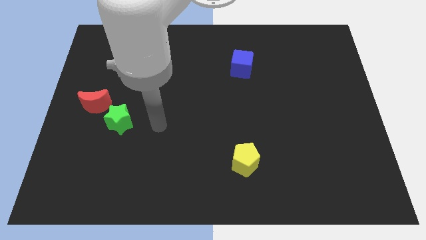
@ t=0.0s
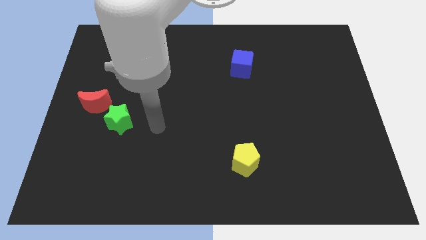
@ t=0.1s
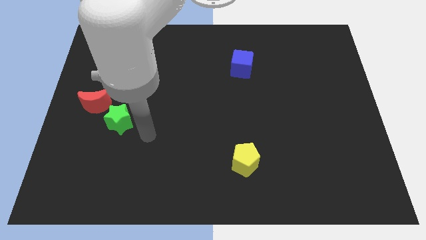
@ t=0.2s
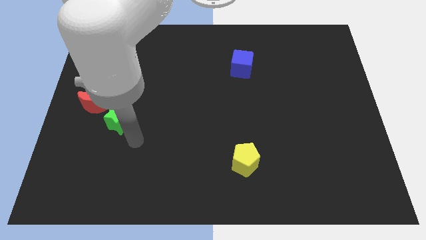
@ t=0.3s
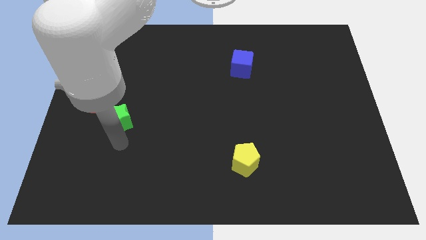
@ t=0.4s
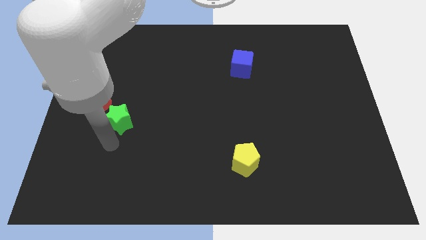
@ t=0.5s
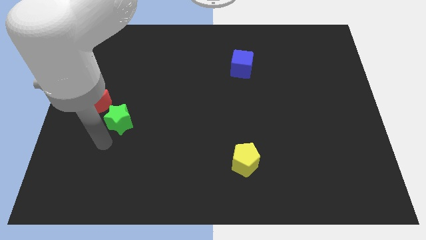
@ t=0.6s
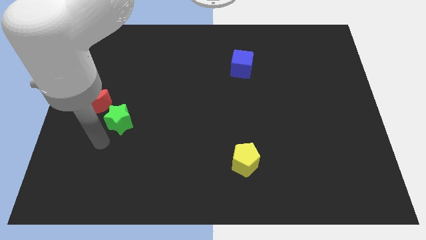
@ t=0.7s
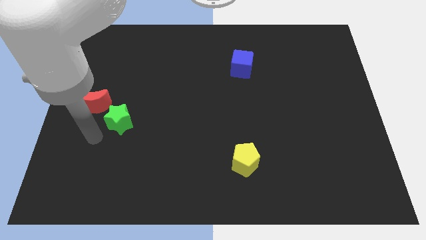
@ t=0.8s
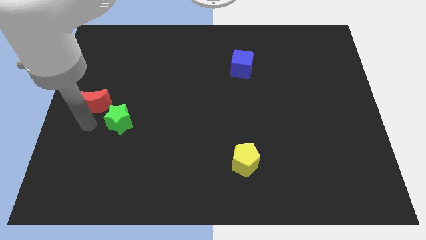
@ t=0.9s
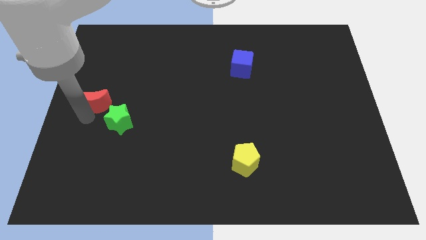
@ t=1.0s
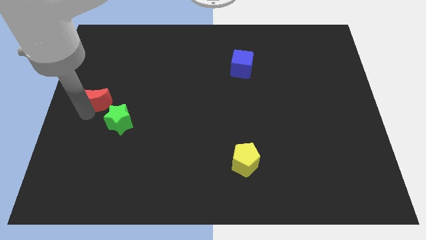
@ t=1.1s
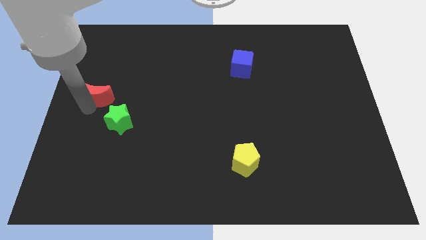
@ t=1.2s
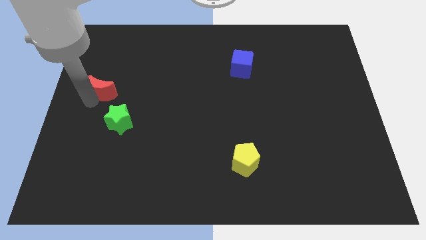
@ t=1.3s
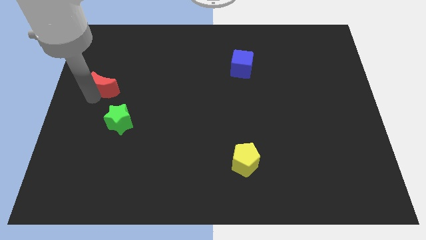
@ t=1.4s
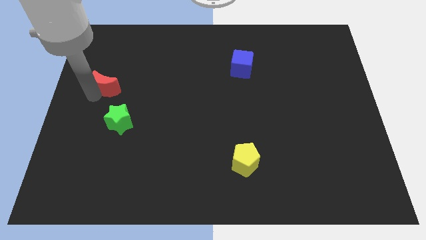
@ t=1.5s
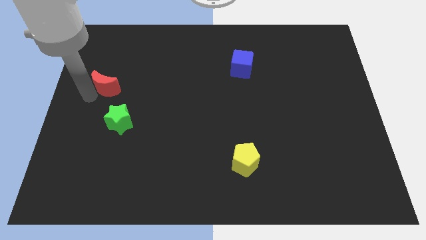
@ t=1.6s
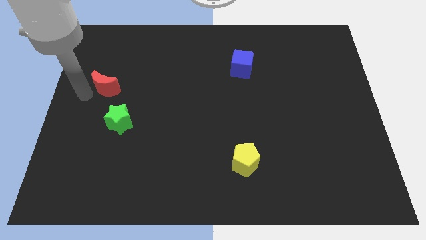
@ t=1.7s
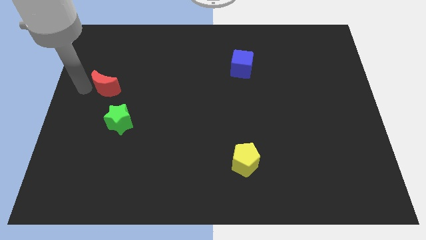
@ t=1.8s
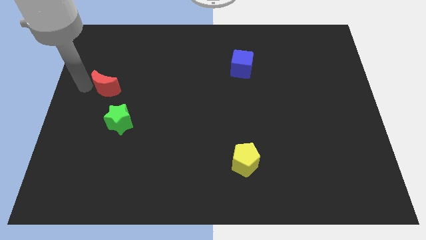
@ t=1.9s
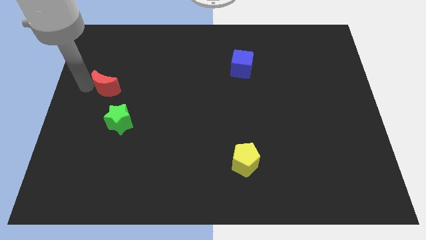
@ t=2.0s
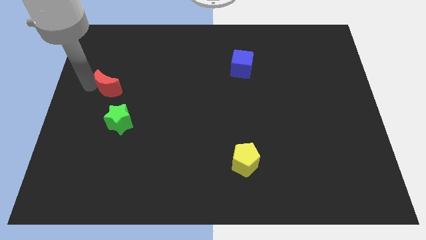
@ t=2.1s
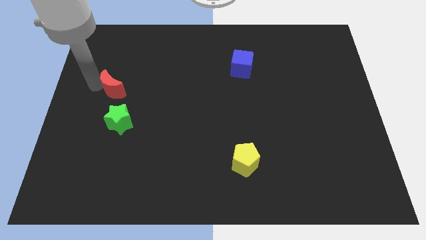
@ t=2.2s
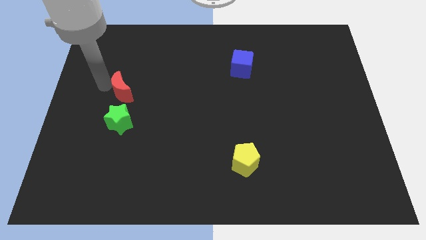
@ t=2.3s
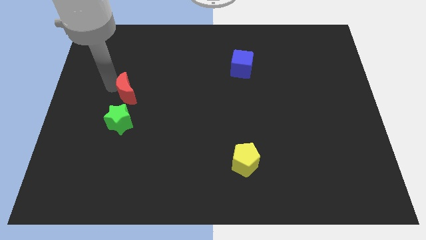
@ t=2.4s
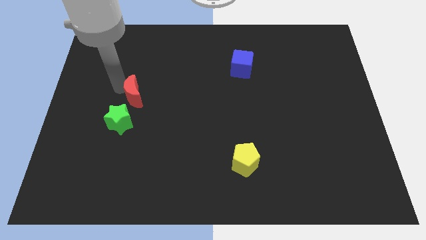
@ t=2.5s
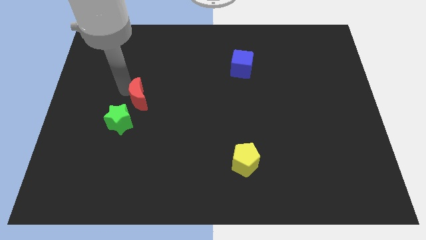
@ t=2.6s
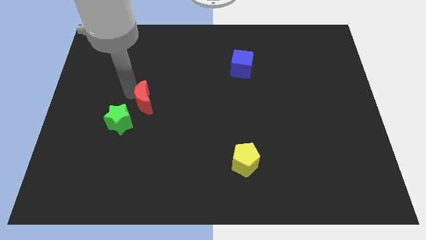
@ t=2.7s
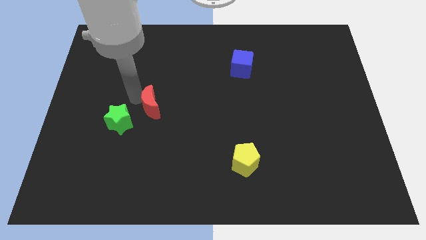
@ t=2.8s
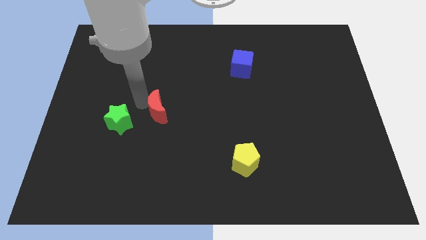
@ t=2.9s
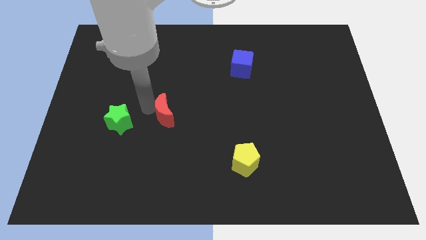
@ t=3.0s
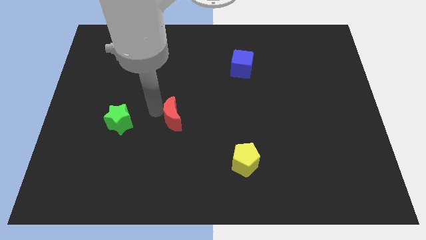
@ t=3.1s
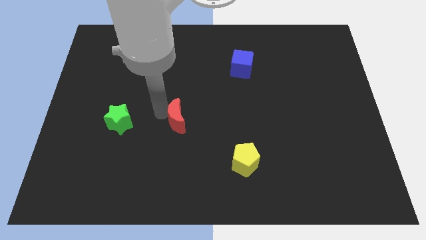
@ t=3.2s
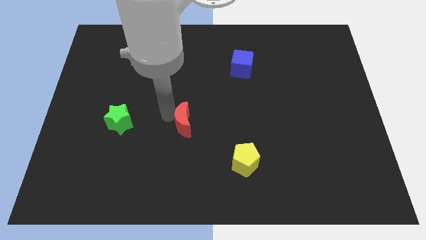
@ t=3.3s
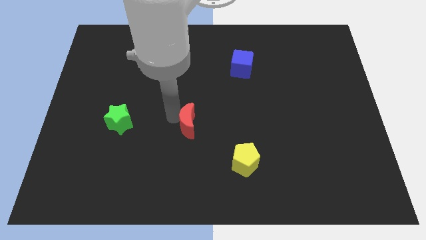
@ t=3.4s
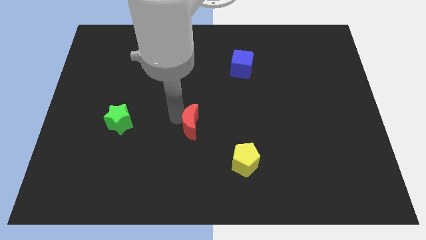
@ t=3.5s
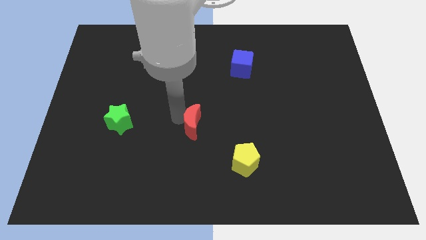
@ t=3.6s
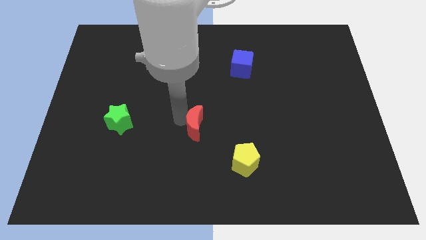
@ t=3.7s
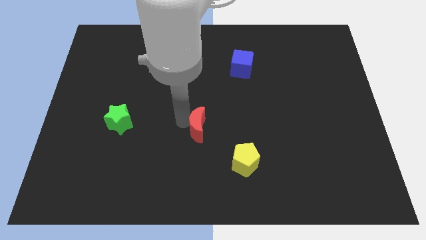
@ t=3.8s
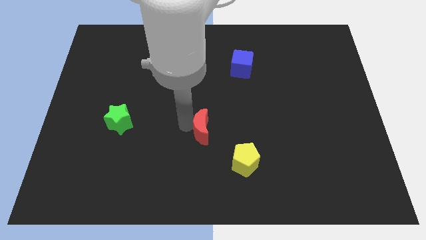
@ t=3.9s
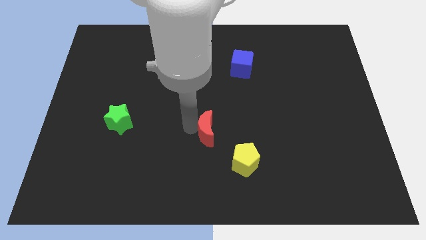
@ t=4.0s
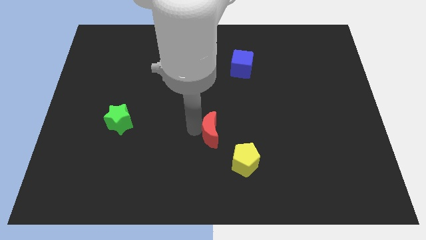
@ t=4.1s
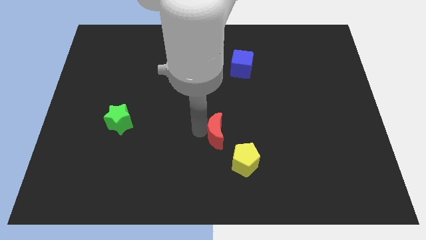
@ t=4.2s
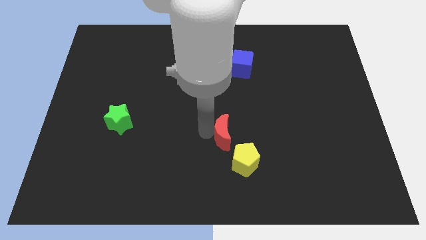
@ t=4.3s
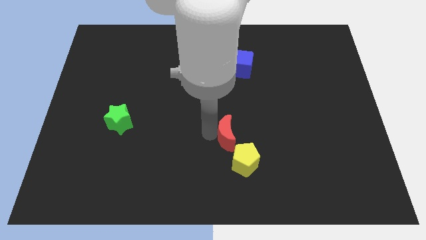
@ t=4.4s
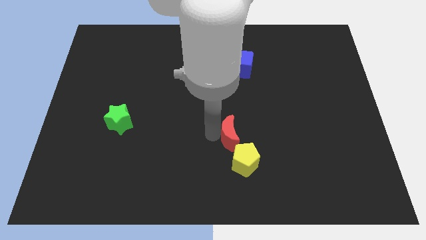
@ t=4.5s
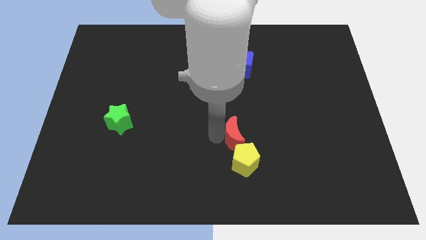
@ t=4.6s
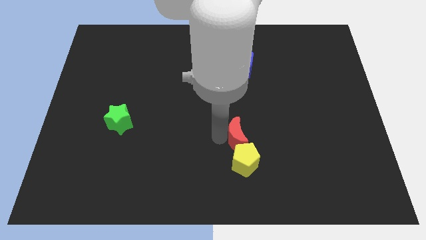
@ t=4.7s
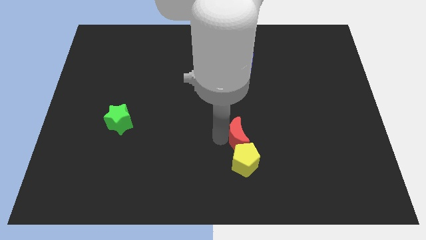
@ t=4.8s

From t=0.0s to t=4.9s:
push the red moon towards the yellow block

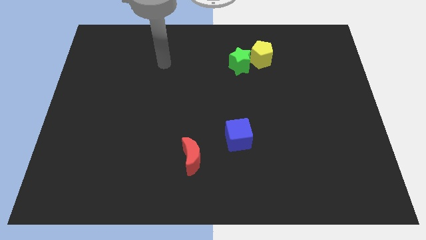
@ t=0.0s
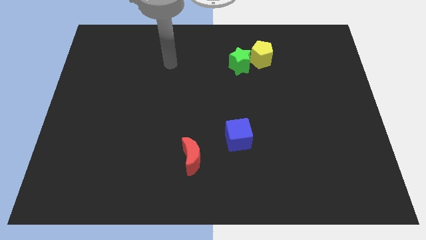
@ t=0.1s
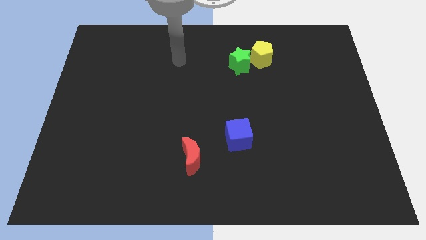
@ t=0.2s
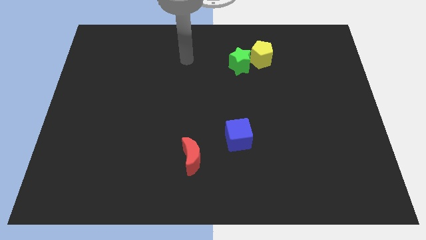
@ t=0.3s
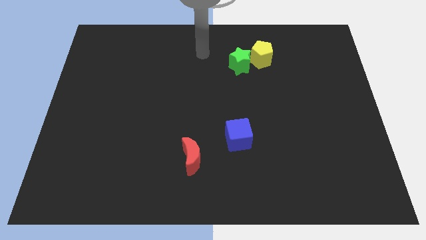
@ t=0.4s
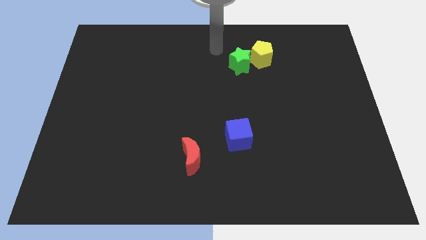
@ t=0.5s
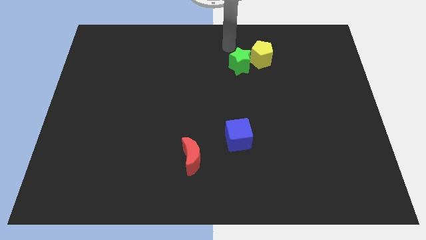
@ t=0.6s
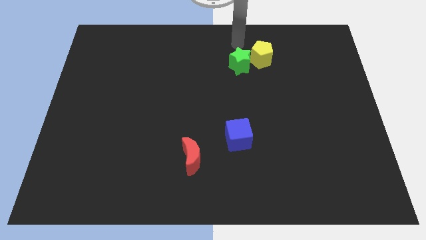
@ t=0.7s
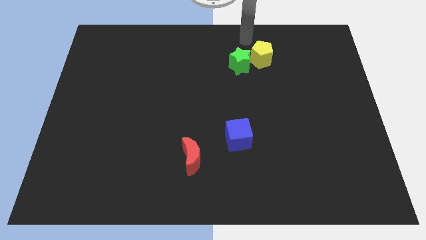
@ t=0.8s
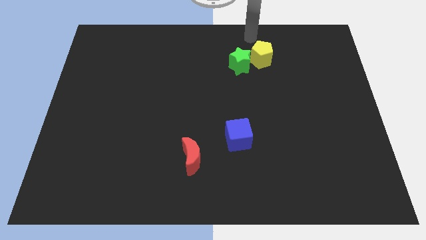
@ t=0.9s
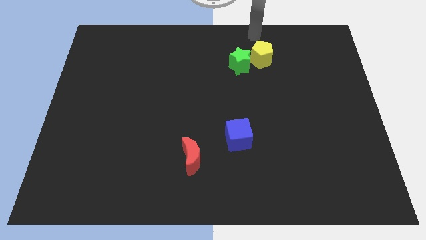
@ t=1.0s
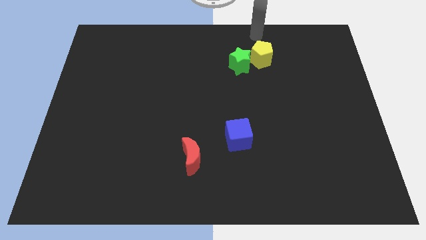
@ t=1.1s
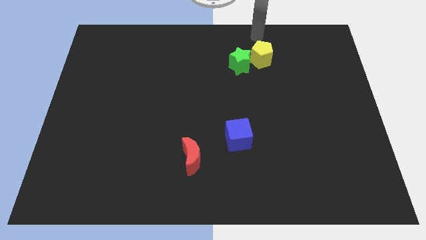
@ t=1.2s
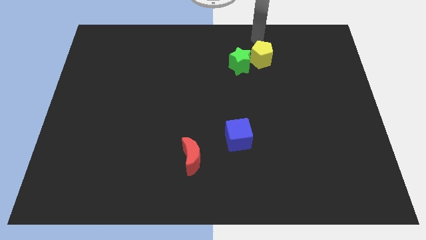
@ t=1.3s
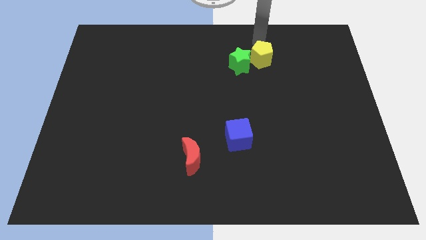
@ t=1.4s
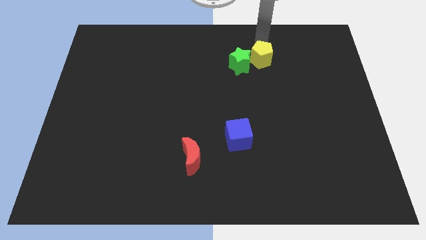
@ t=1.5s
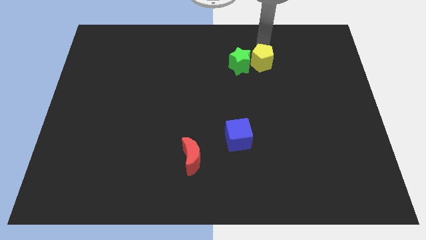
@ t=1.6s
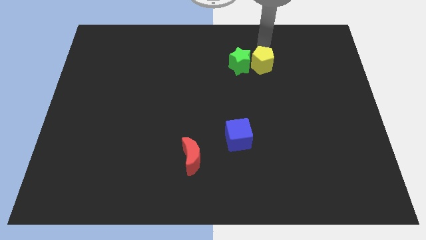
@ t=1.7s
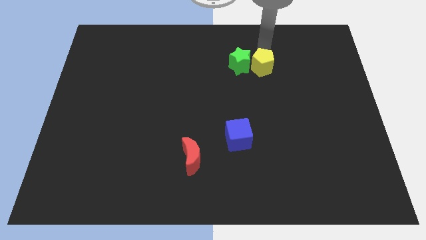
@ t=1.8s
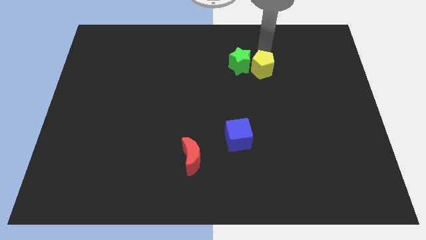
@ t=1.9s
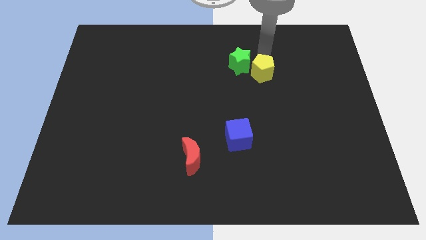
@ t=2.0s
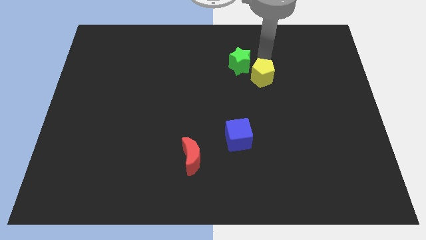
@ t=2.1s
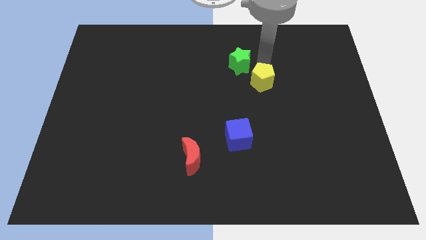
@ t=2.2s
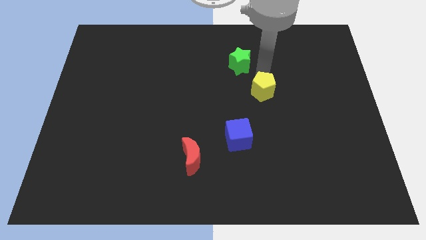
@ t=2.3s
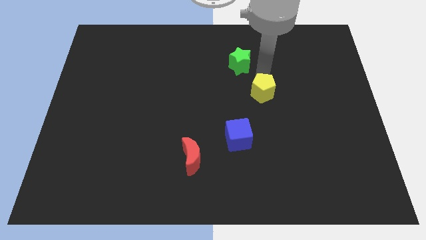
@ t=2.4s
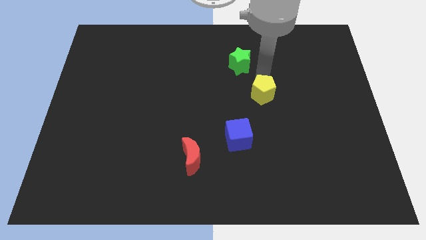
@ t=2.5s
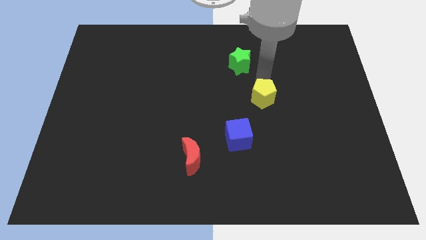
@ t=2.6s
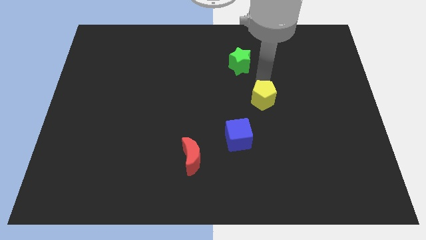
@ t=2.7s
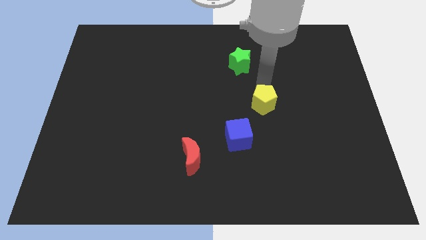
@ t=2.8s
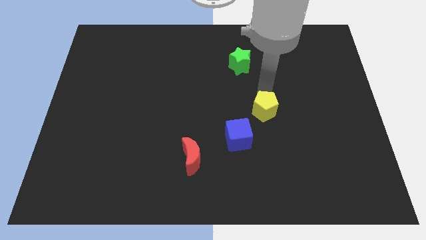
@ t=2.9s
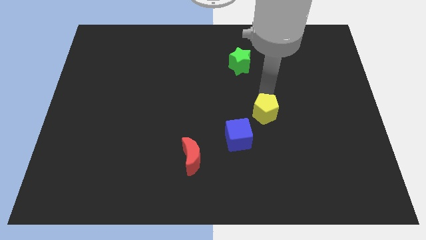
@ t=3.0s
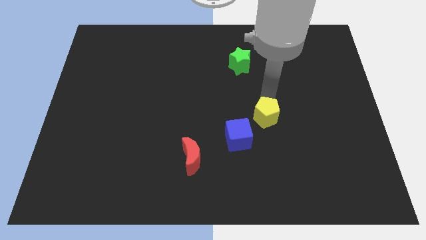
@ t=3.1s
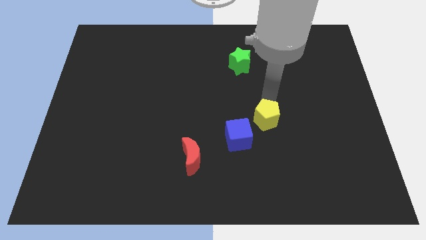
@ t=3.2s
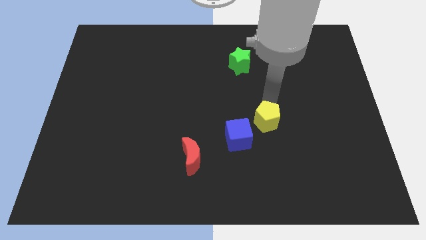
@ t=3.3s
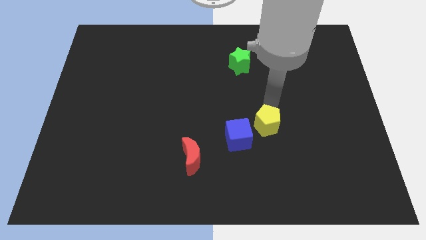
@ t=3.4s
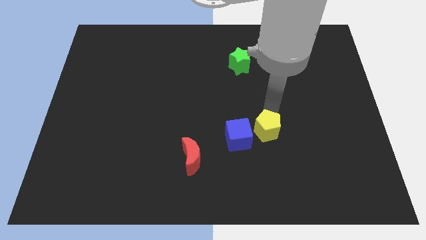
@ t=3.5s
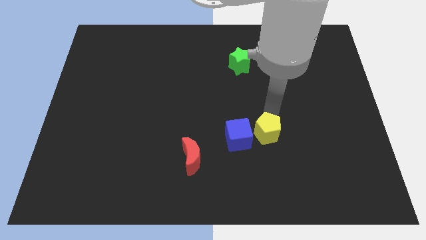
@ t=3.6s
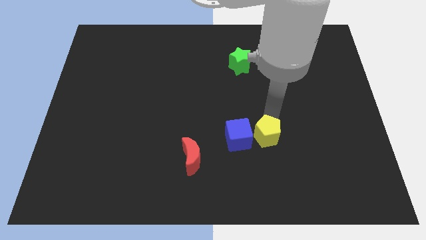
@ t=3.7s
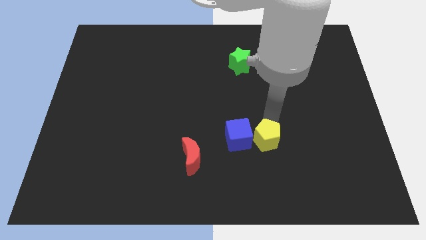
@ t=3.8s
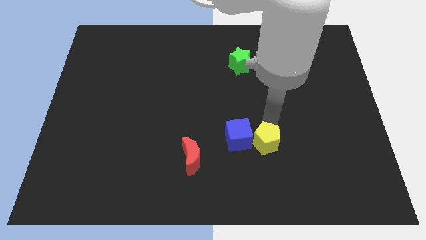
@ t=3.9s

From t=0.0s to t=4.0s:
move the yellow pentagon towards the blue block
